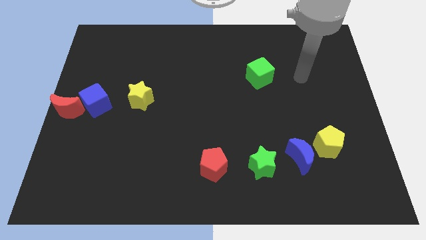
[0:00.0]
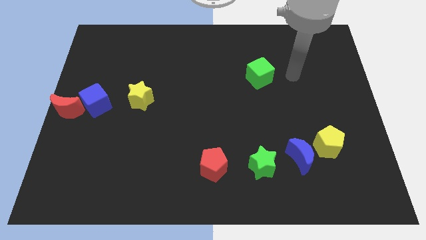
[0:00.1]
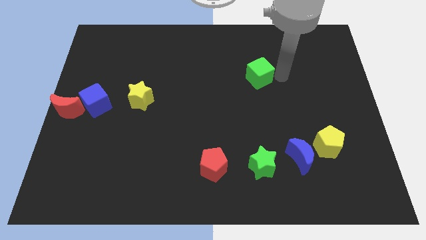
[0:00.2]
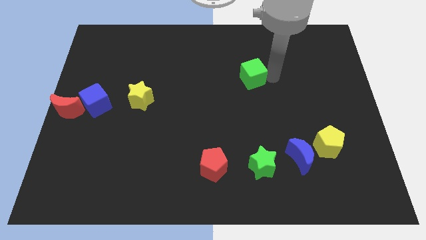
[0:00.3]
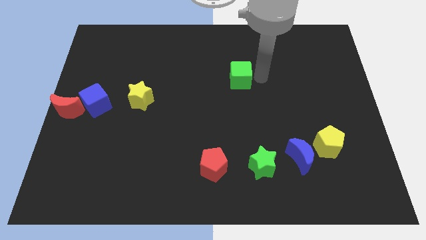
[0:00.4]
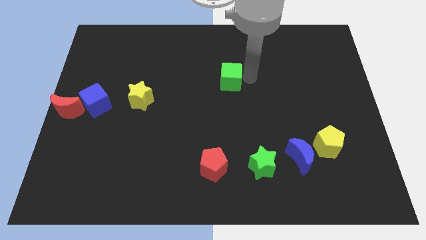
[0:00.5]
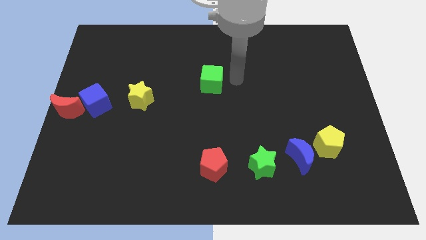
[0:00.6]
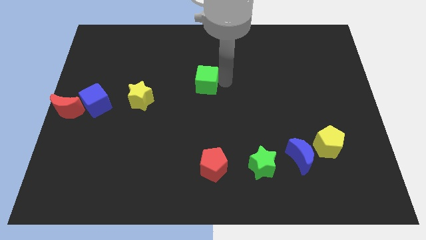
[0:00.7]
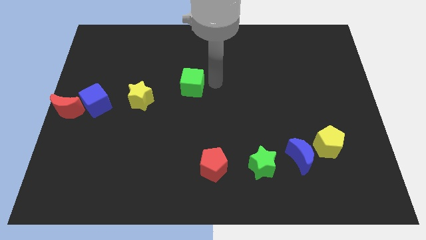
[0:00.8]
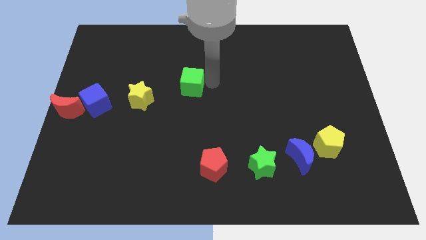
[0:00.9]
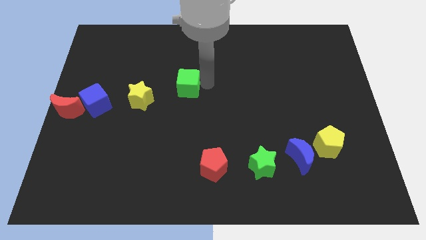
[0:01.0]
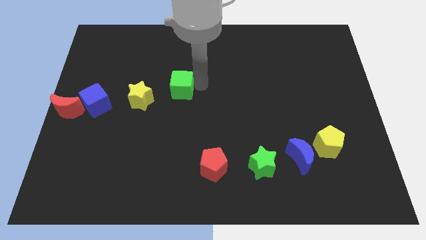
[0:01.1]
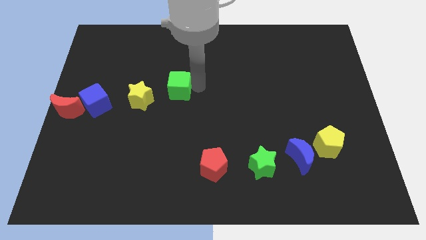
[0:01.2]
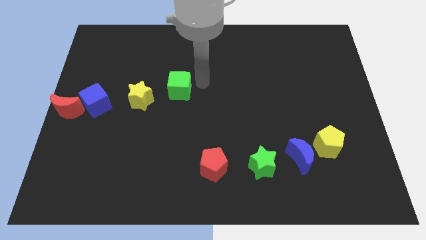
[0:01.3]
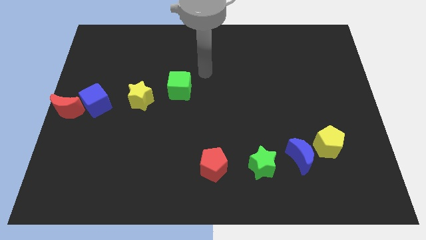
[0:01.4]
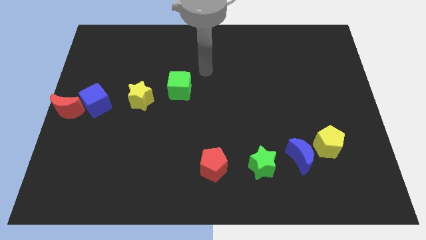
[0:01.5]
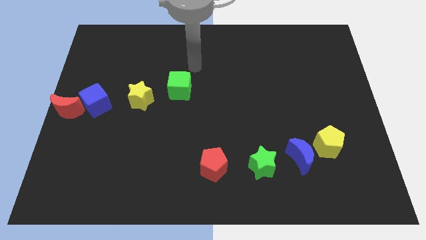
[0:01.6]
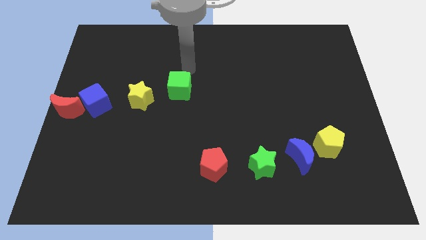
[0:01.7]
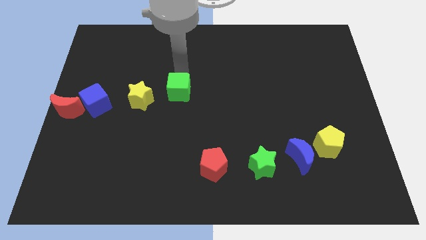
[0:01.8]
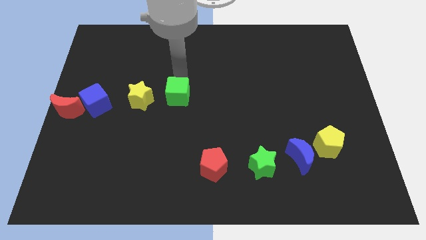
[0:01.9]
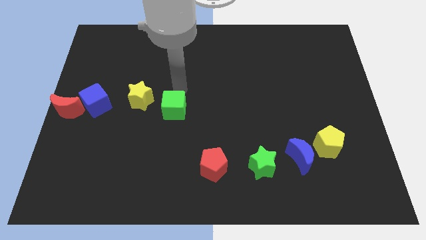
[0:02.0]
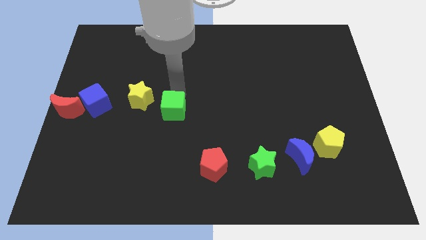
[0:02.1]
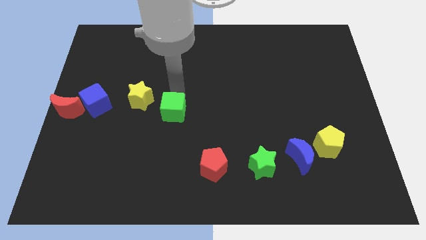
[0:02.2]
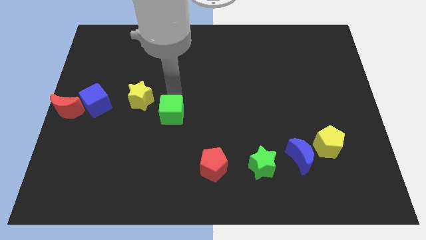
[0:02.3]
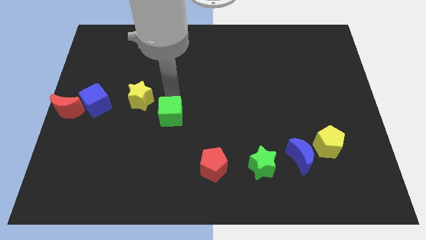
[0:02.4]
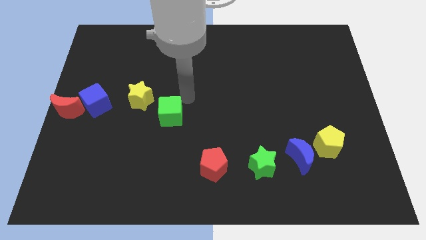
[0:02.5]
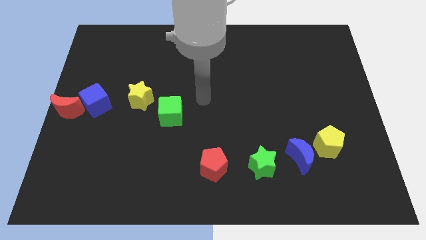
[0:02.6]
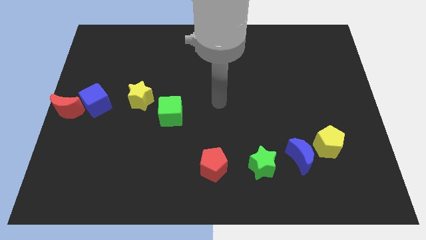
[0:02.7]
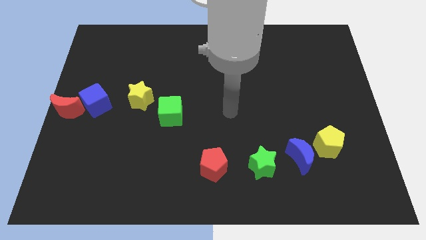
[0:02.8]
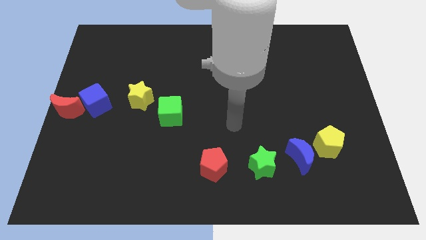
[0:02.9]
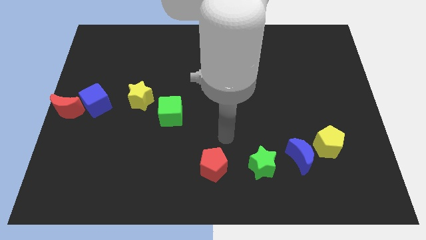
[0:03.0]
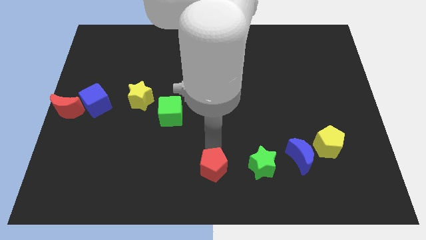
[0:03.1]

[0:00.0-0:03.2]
place the green cube in between the yellow star and red pentagon

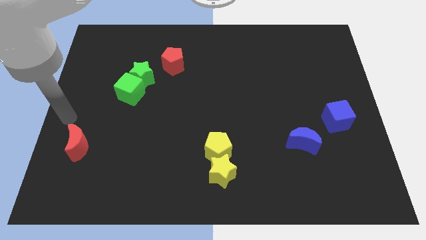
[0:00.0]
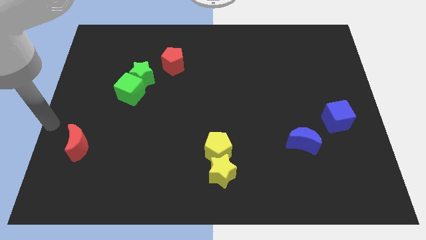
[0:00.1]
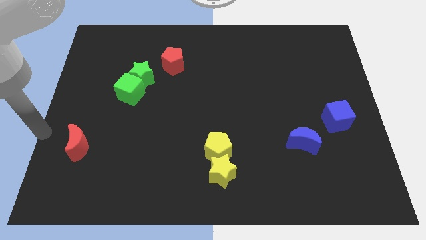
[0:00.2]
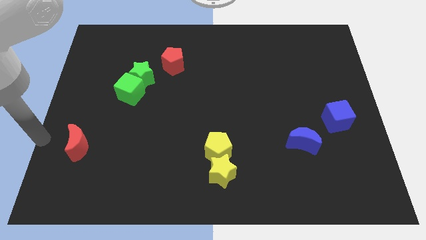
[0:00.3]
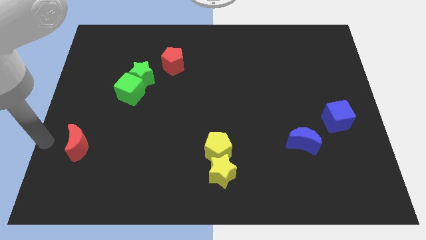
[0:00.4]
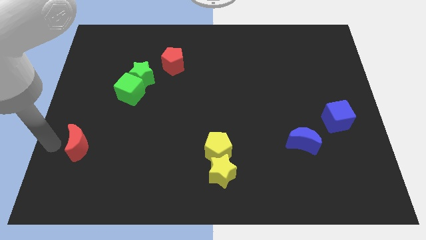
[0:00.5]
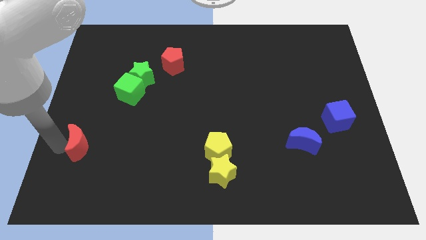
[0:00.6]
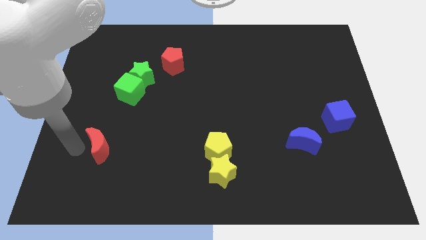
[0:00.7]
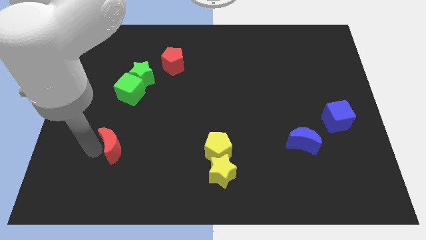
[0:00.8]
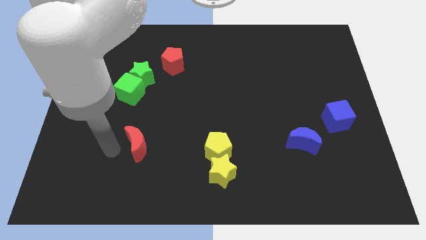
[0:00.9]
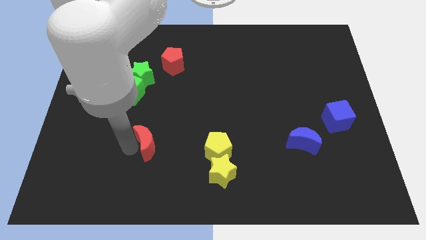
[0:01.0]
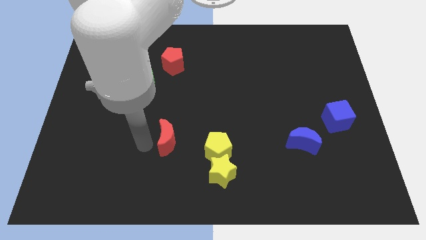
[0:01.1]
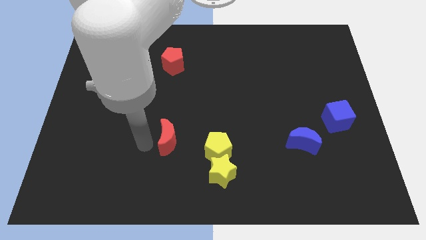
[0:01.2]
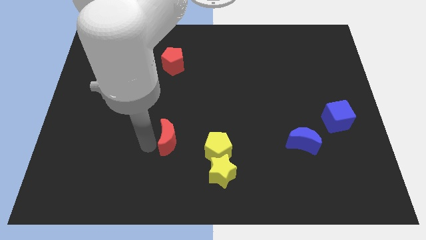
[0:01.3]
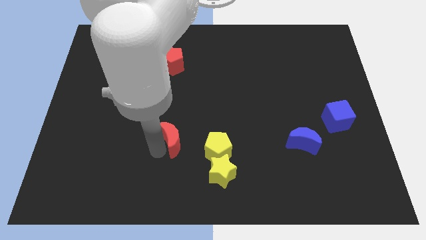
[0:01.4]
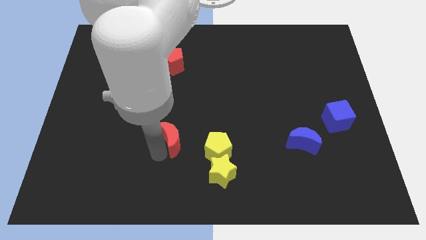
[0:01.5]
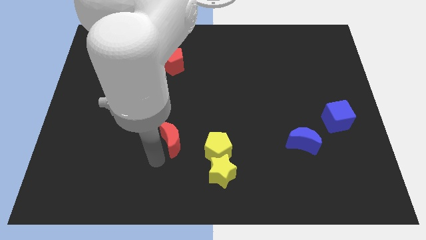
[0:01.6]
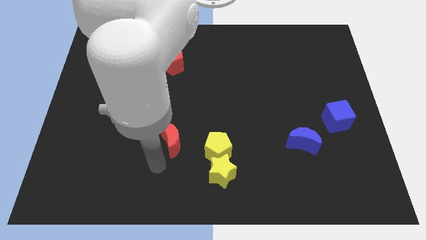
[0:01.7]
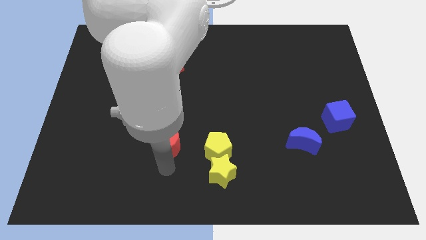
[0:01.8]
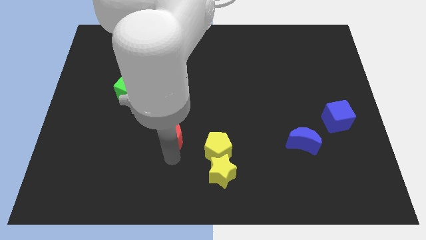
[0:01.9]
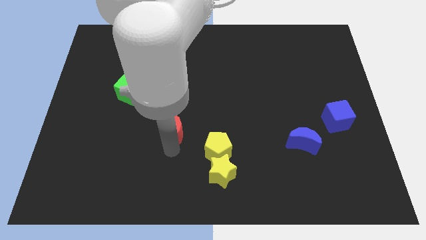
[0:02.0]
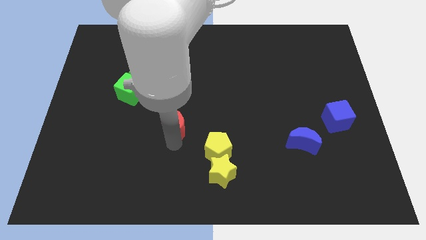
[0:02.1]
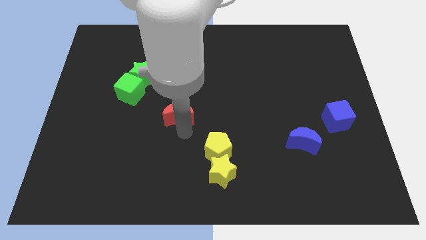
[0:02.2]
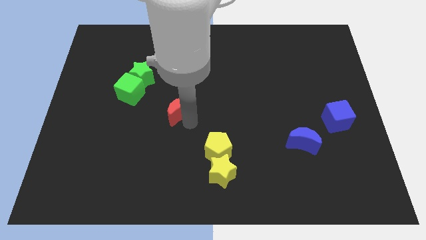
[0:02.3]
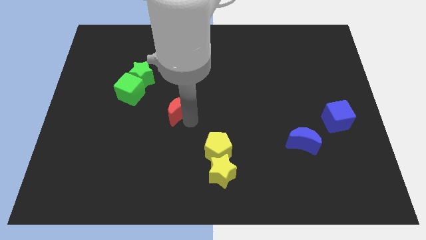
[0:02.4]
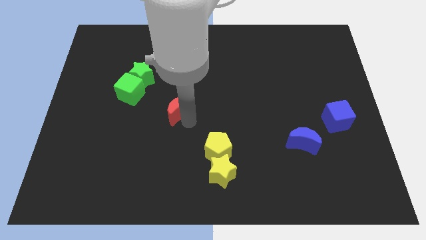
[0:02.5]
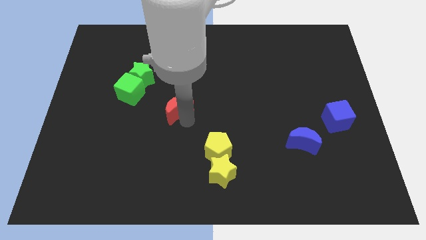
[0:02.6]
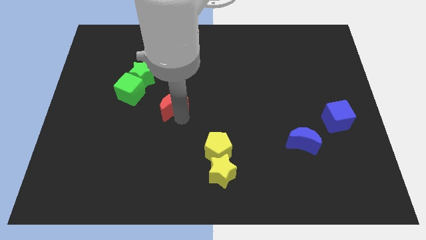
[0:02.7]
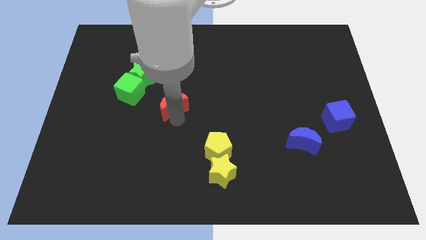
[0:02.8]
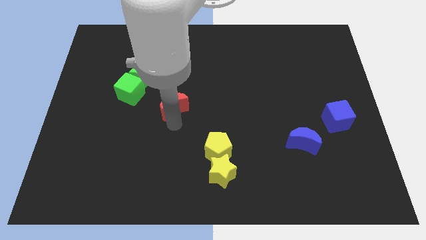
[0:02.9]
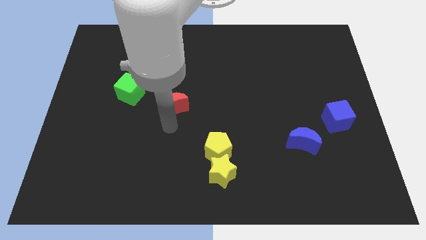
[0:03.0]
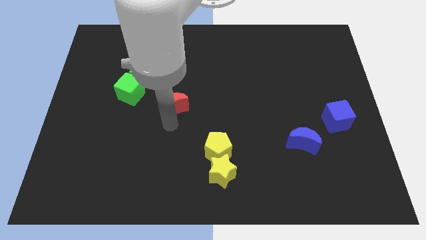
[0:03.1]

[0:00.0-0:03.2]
place the red moon in between green cube and yellow pentagon

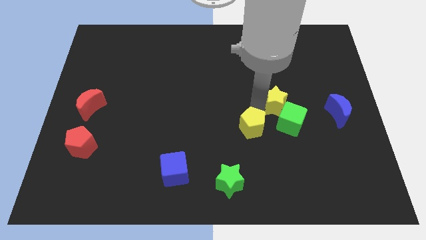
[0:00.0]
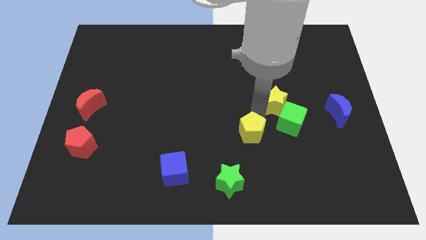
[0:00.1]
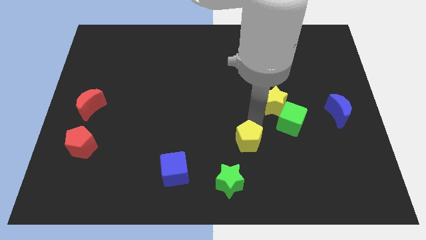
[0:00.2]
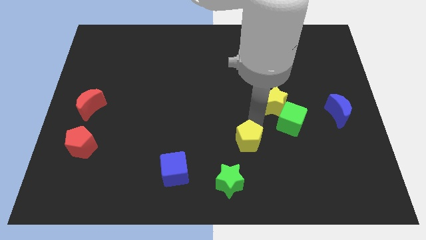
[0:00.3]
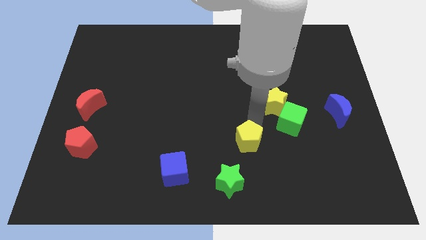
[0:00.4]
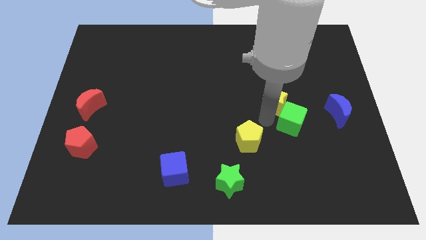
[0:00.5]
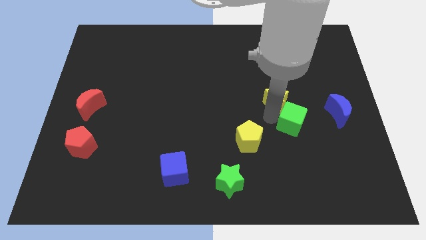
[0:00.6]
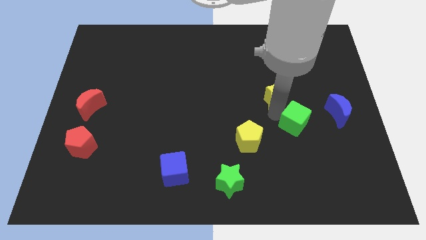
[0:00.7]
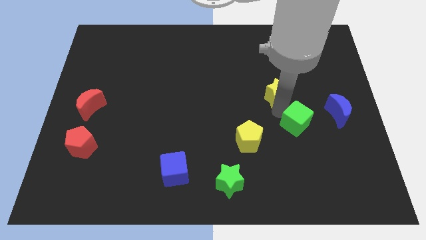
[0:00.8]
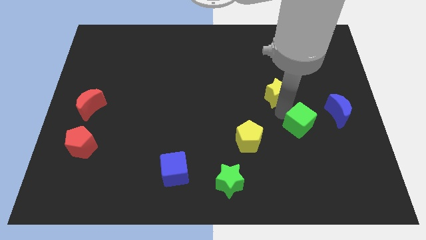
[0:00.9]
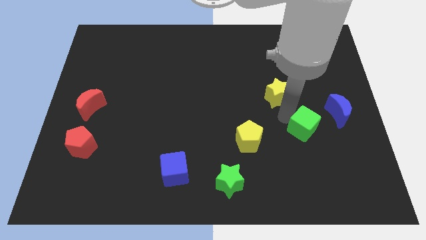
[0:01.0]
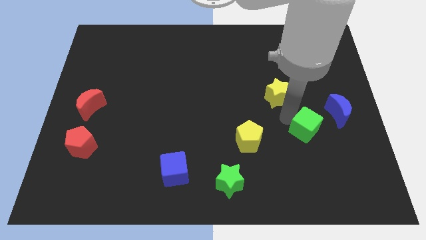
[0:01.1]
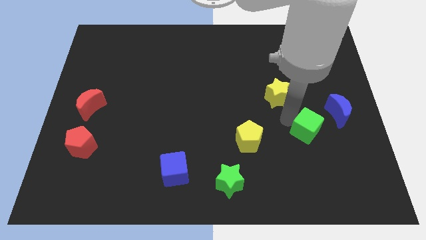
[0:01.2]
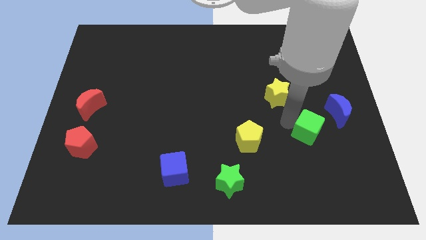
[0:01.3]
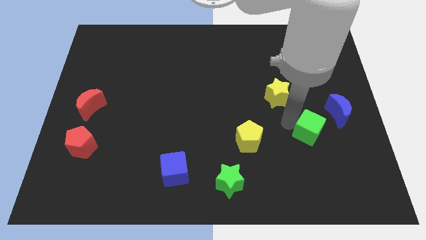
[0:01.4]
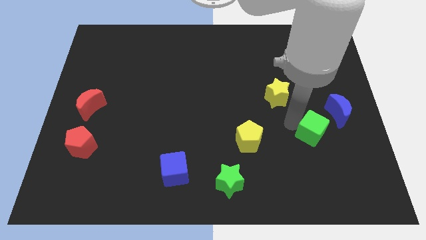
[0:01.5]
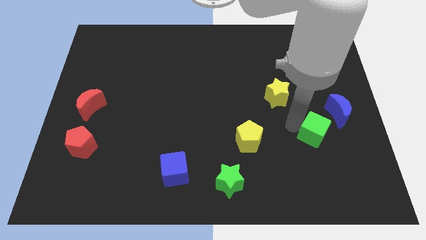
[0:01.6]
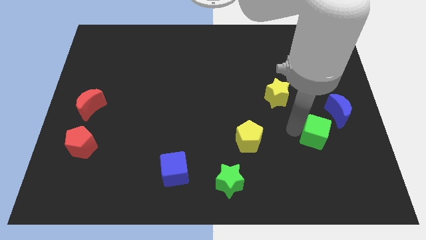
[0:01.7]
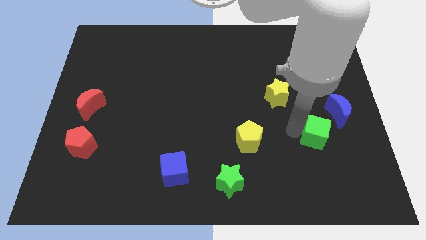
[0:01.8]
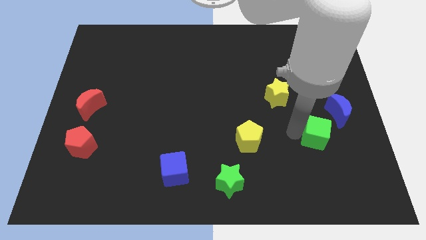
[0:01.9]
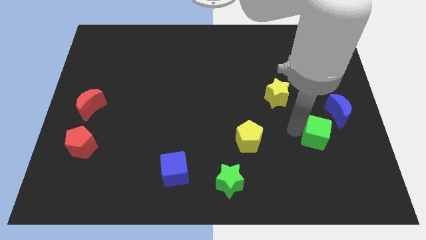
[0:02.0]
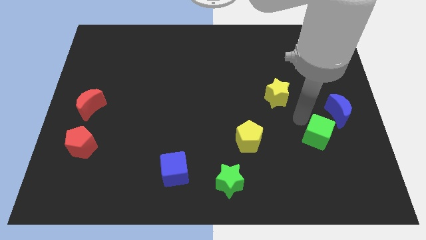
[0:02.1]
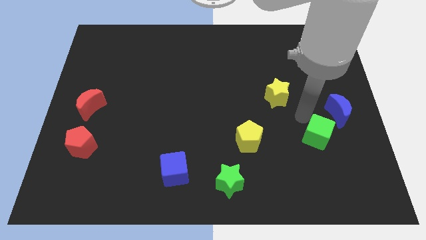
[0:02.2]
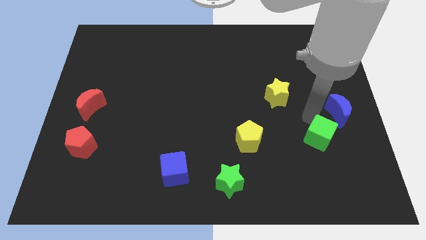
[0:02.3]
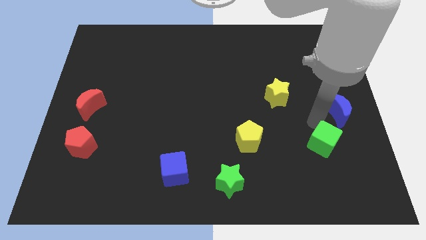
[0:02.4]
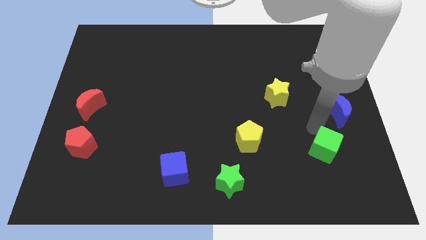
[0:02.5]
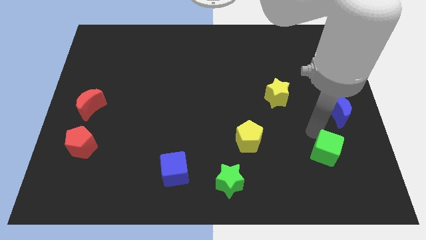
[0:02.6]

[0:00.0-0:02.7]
place the green cube right to the yellow pentagon
